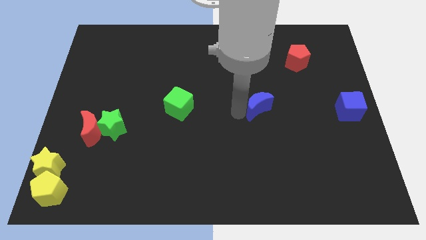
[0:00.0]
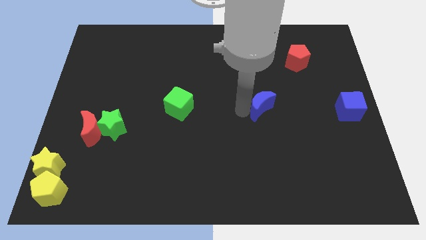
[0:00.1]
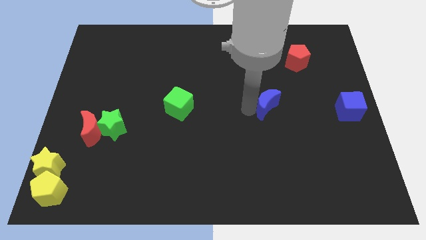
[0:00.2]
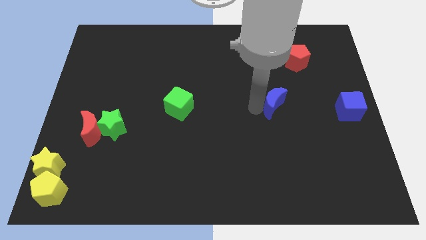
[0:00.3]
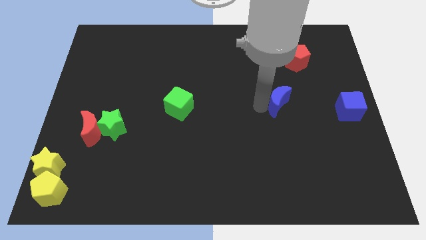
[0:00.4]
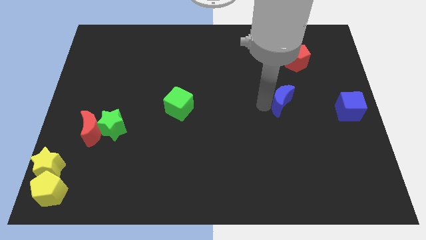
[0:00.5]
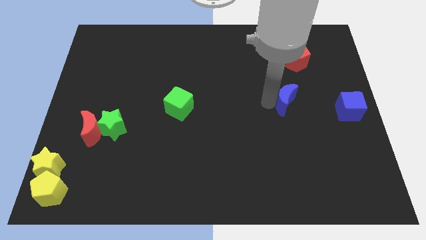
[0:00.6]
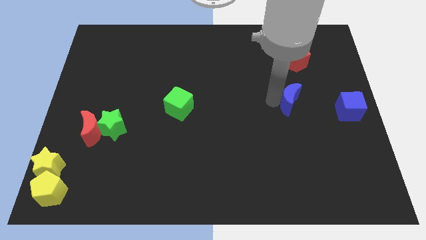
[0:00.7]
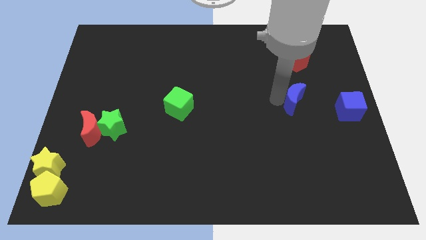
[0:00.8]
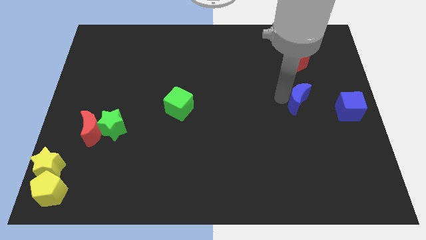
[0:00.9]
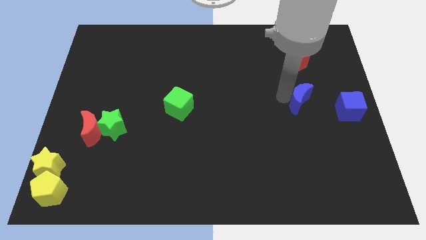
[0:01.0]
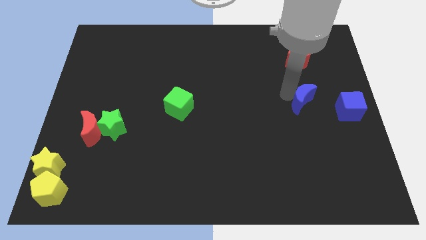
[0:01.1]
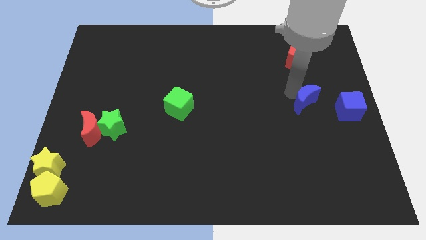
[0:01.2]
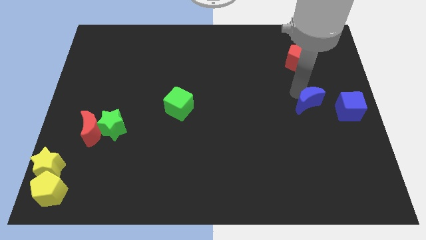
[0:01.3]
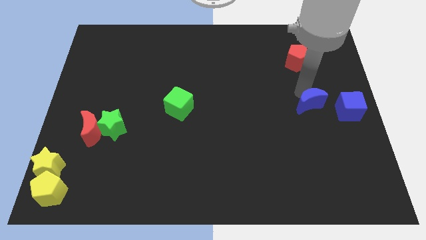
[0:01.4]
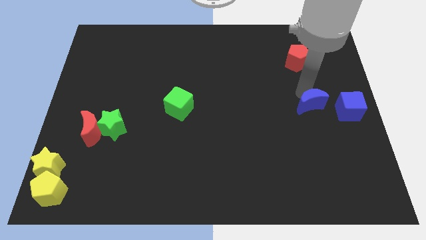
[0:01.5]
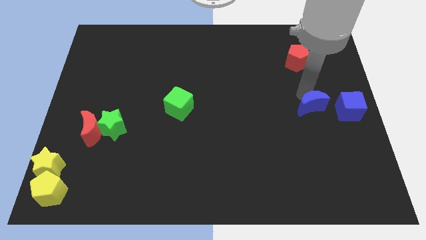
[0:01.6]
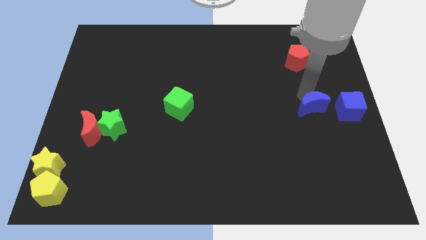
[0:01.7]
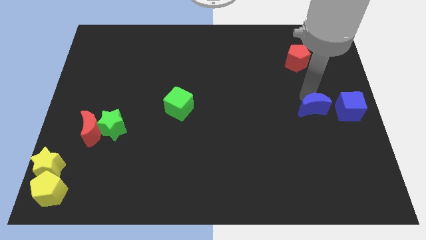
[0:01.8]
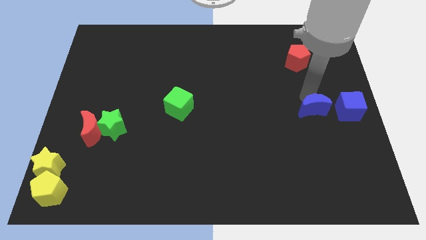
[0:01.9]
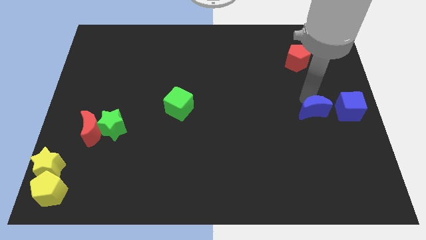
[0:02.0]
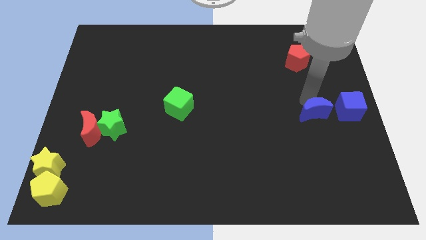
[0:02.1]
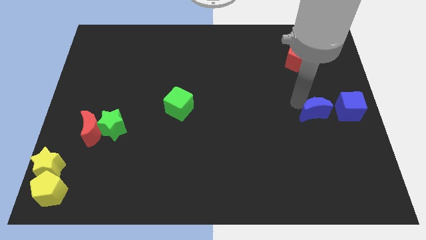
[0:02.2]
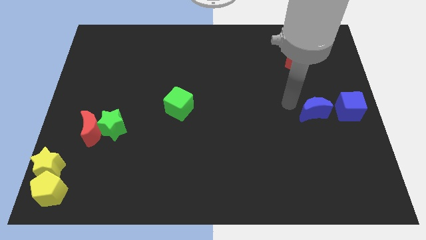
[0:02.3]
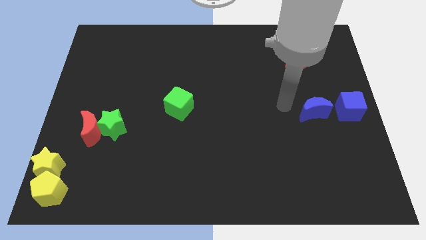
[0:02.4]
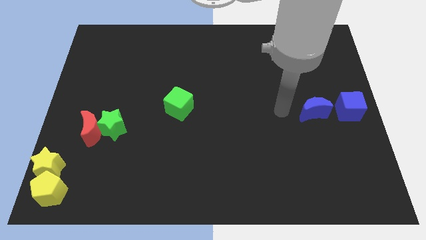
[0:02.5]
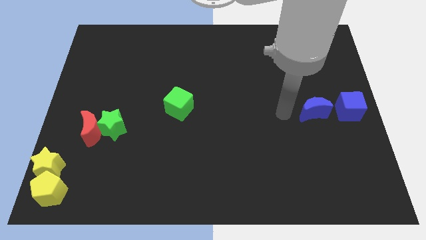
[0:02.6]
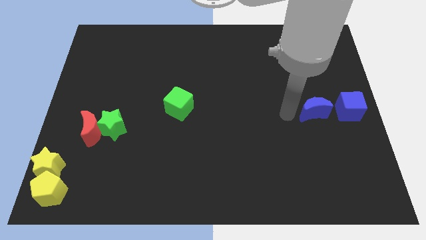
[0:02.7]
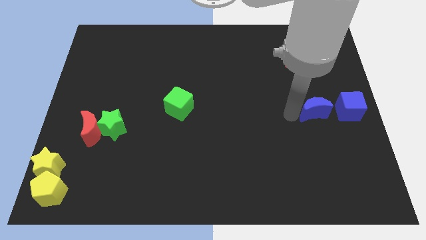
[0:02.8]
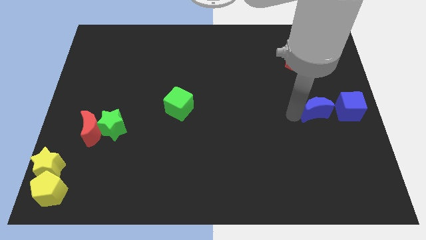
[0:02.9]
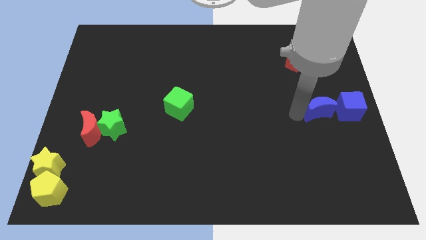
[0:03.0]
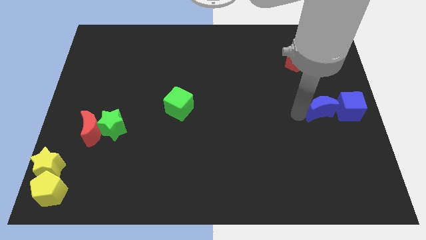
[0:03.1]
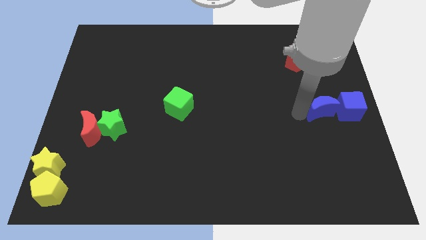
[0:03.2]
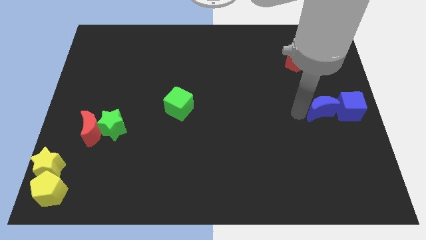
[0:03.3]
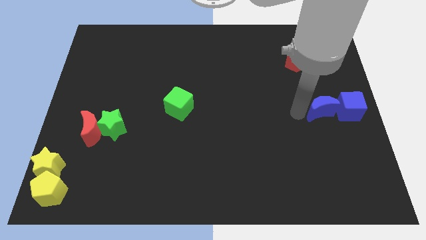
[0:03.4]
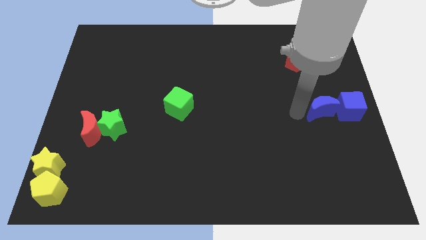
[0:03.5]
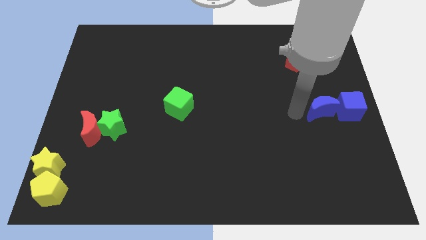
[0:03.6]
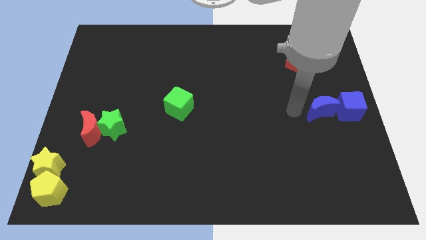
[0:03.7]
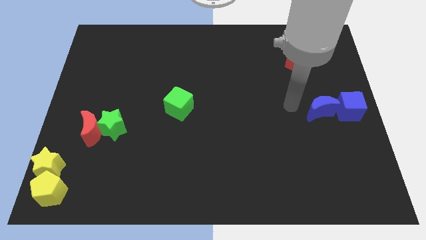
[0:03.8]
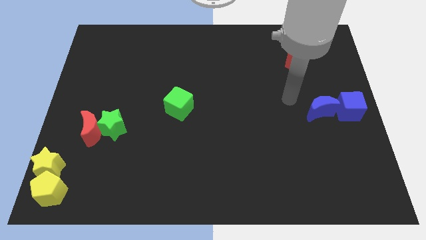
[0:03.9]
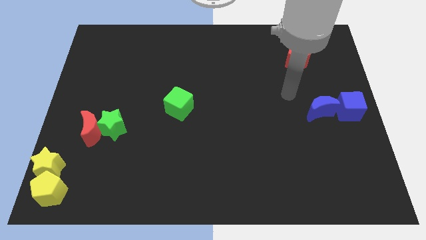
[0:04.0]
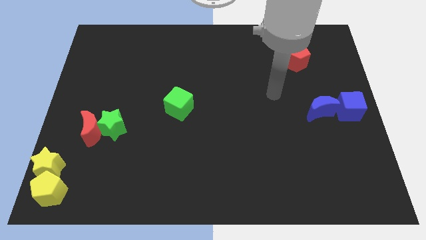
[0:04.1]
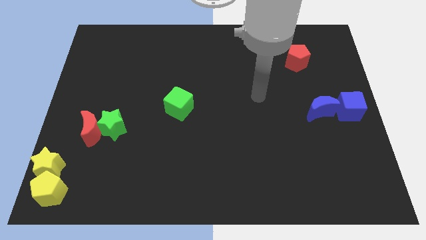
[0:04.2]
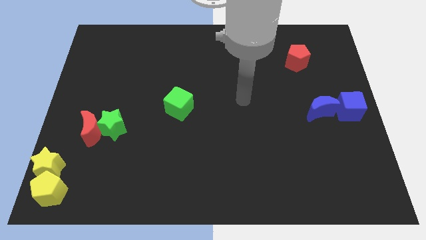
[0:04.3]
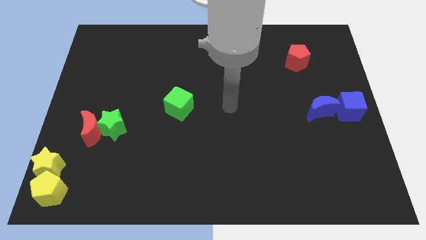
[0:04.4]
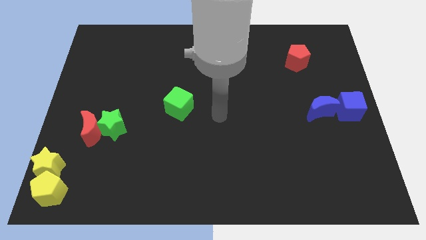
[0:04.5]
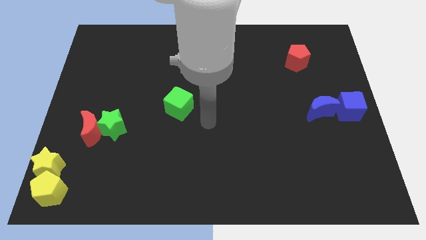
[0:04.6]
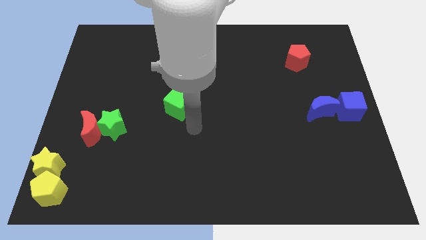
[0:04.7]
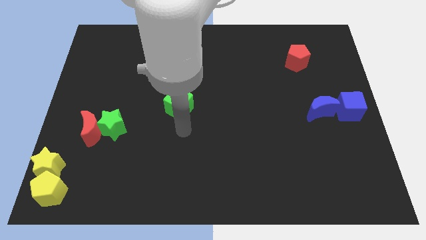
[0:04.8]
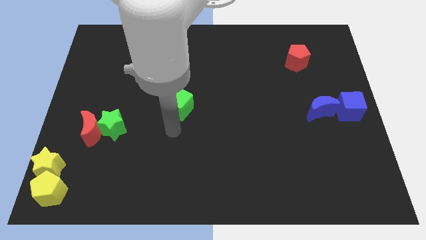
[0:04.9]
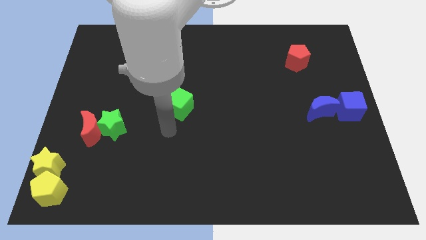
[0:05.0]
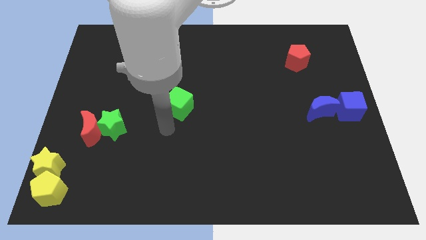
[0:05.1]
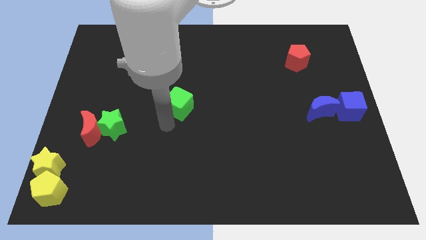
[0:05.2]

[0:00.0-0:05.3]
place the blue crescent into the blue cube

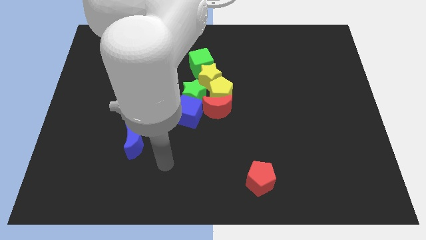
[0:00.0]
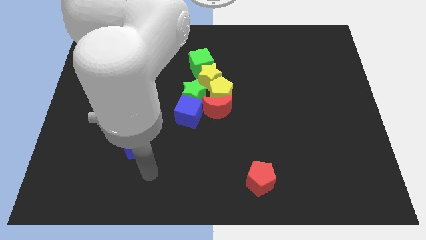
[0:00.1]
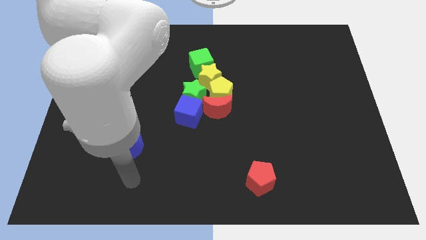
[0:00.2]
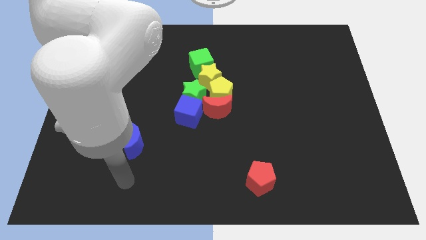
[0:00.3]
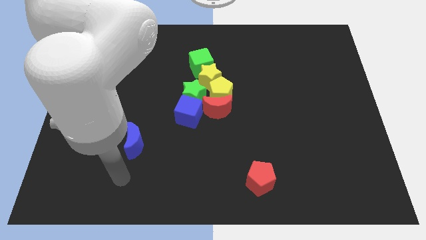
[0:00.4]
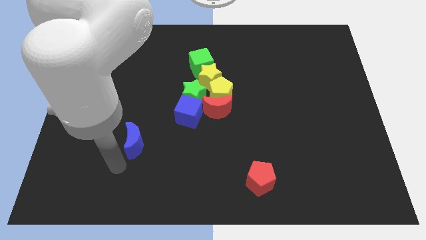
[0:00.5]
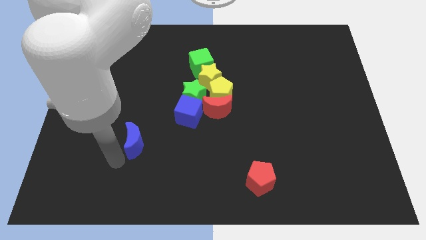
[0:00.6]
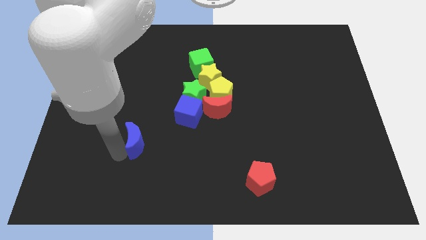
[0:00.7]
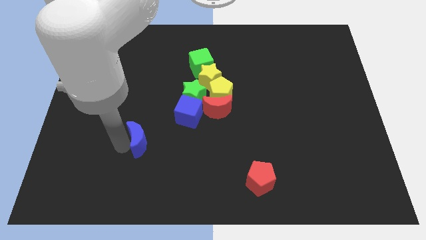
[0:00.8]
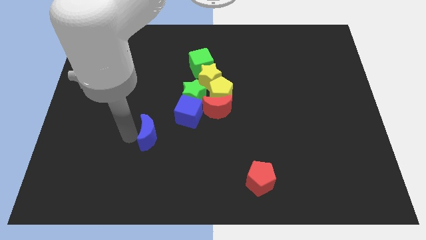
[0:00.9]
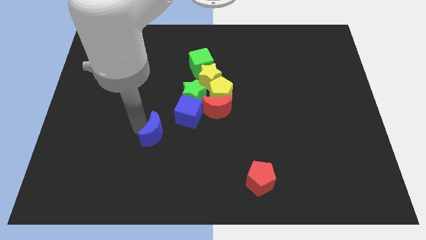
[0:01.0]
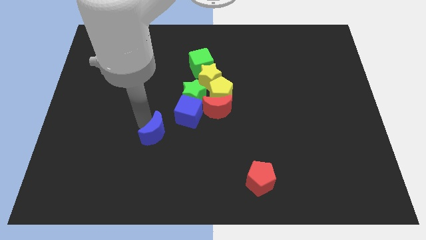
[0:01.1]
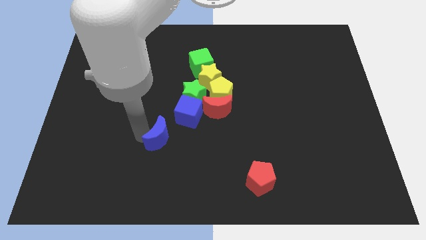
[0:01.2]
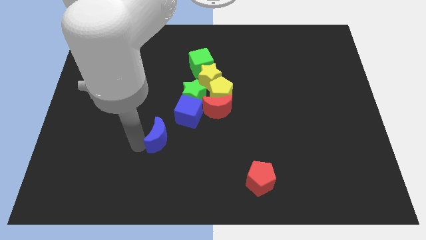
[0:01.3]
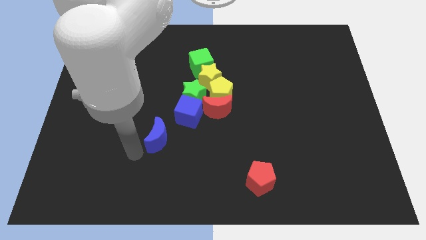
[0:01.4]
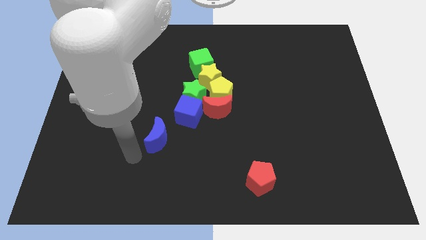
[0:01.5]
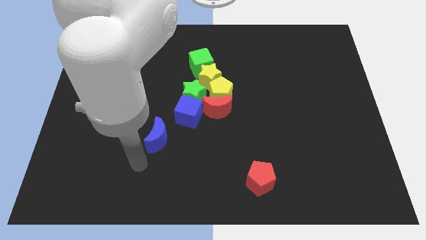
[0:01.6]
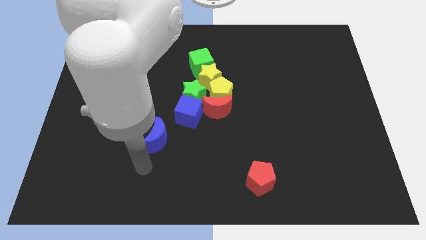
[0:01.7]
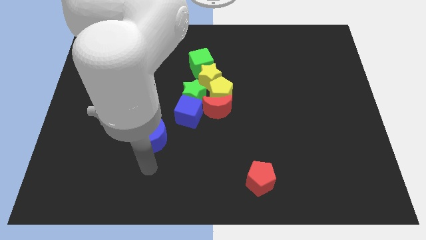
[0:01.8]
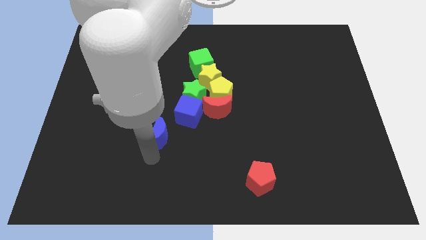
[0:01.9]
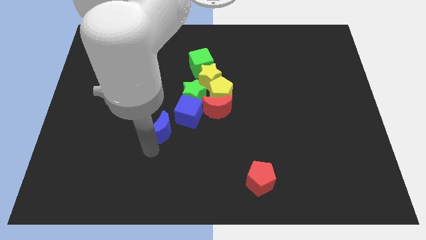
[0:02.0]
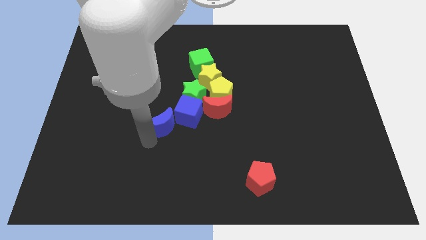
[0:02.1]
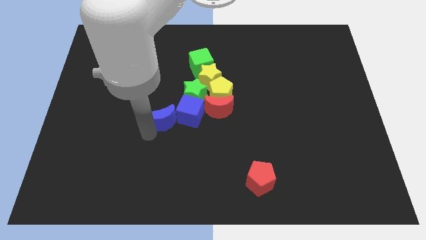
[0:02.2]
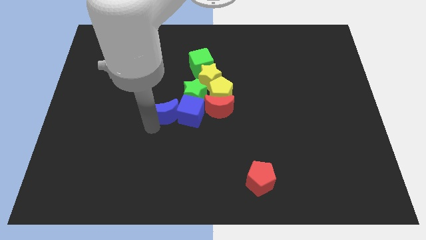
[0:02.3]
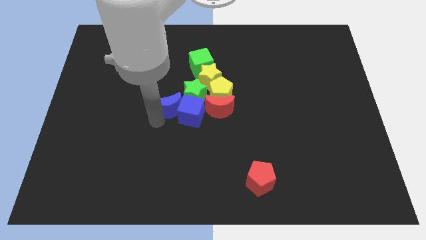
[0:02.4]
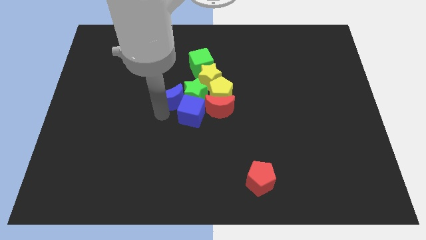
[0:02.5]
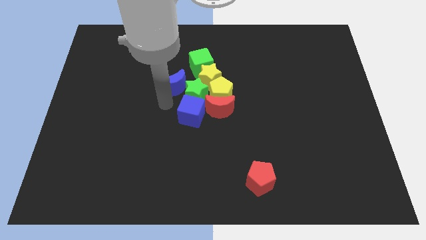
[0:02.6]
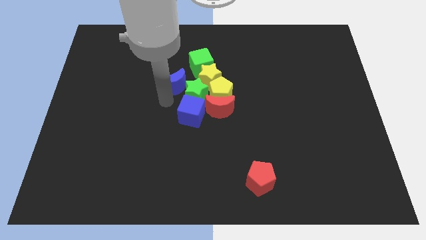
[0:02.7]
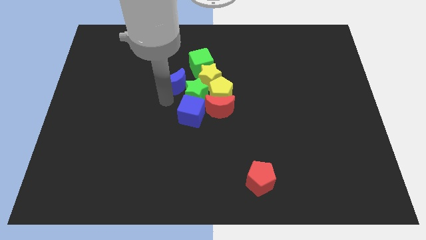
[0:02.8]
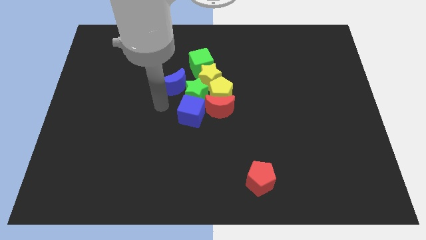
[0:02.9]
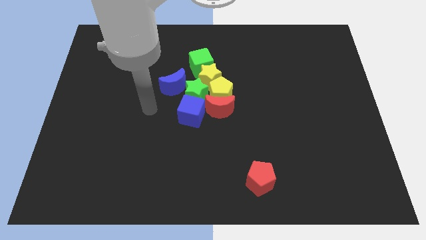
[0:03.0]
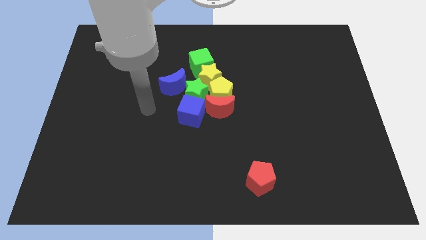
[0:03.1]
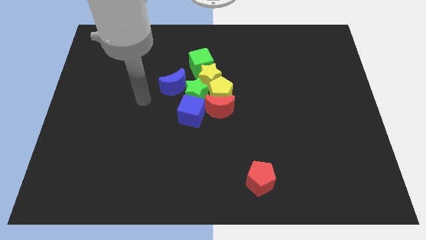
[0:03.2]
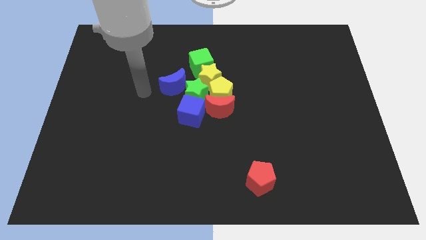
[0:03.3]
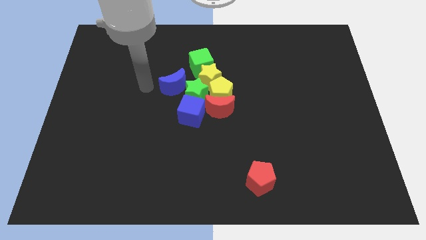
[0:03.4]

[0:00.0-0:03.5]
place blue moon to the left of the green star
